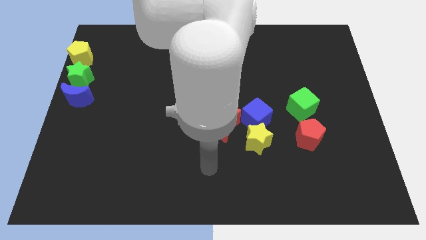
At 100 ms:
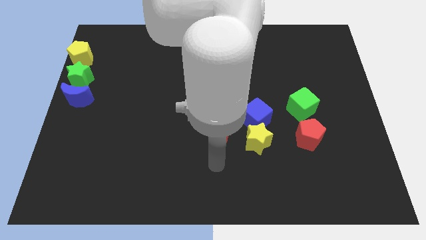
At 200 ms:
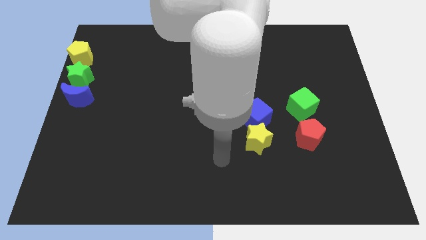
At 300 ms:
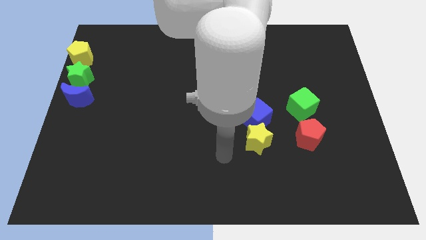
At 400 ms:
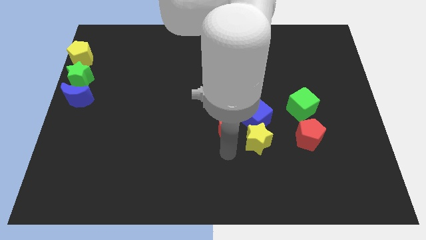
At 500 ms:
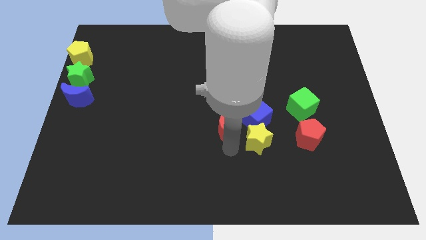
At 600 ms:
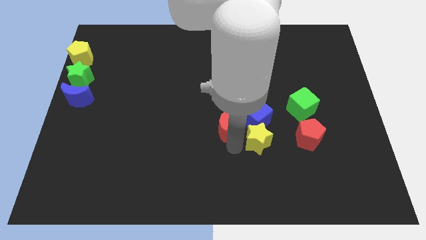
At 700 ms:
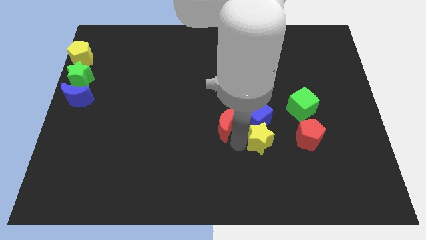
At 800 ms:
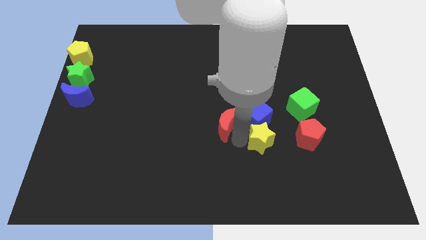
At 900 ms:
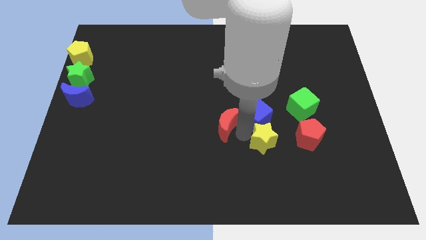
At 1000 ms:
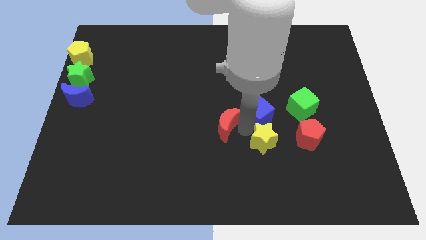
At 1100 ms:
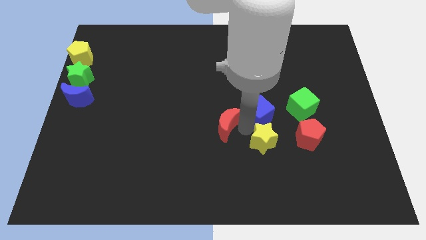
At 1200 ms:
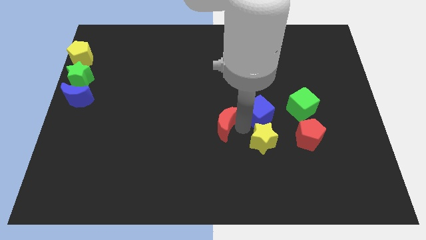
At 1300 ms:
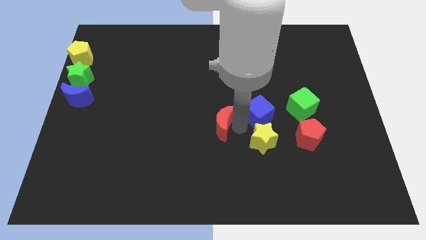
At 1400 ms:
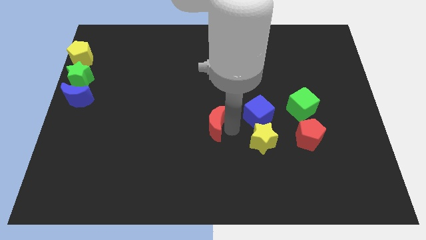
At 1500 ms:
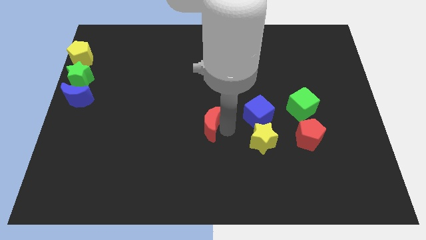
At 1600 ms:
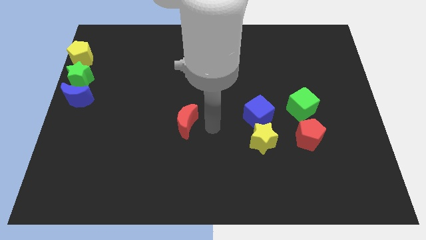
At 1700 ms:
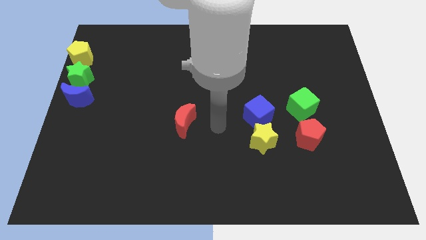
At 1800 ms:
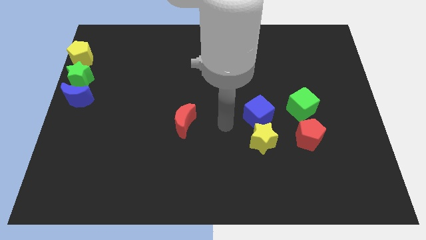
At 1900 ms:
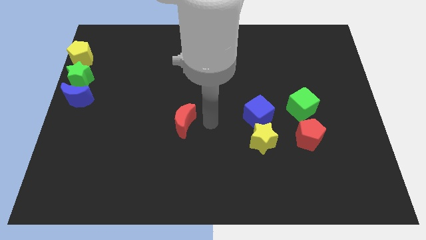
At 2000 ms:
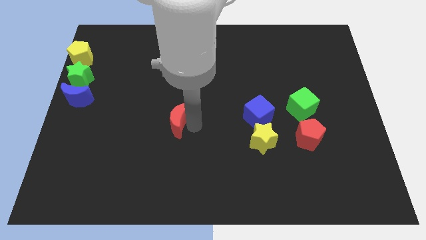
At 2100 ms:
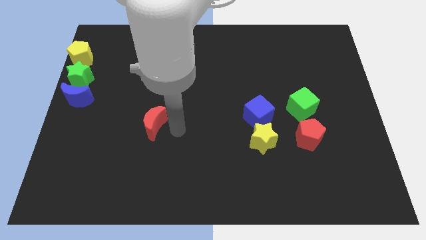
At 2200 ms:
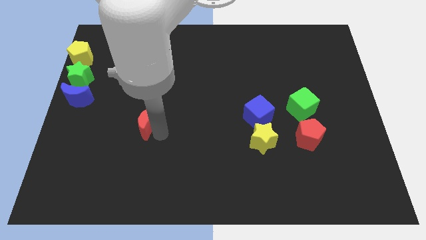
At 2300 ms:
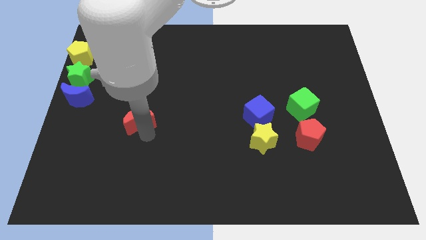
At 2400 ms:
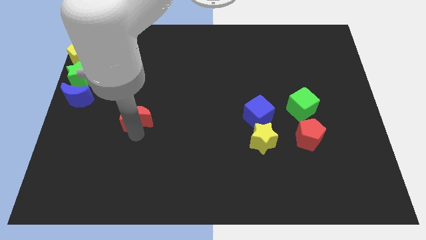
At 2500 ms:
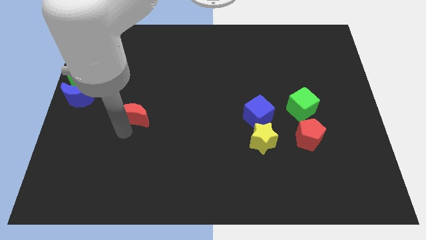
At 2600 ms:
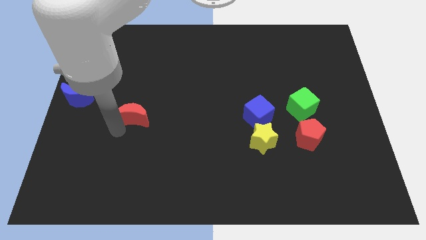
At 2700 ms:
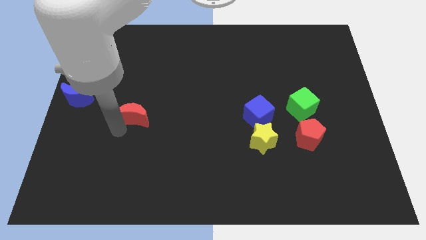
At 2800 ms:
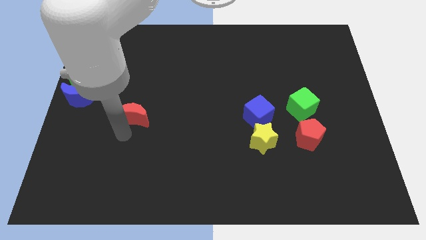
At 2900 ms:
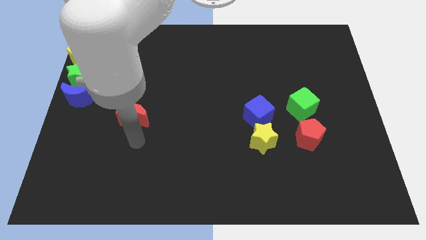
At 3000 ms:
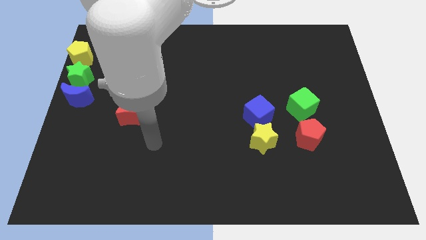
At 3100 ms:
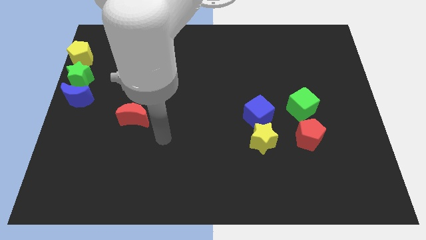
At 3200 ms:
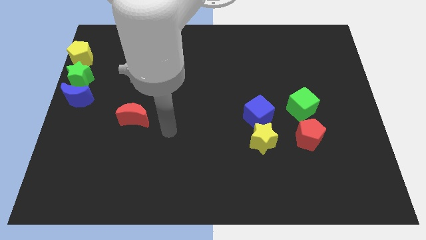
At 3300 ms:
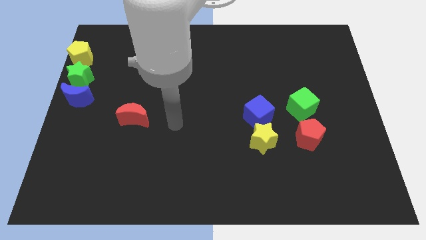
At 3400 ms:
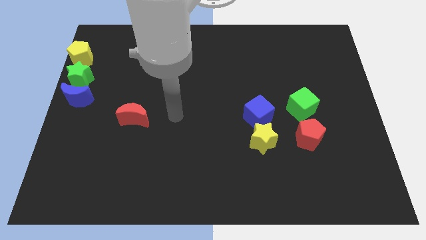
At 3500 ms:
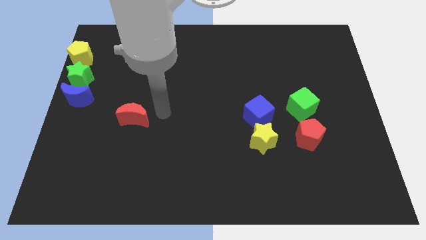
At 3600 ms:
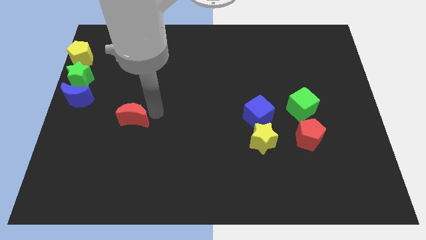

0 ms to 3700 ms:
move the red crescent away from the blue cube

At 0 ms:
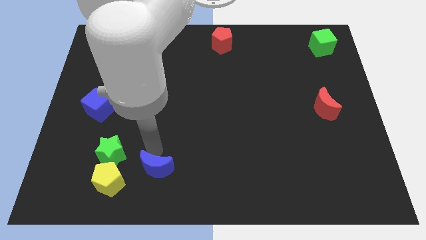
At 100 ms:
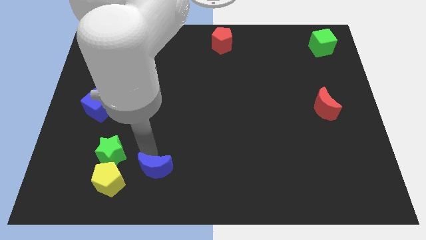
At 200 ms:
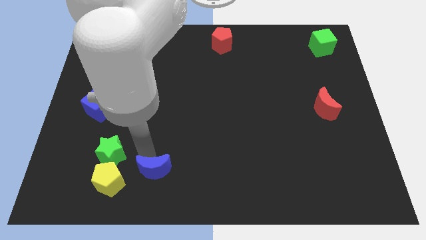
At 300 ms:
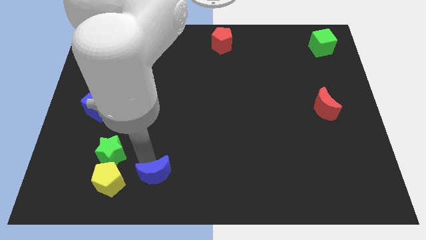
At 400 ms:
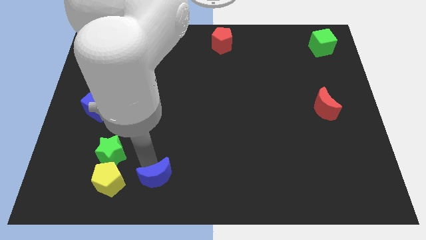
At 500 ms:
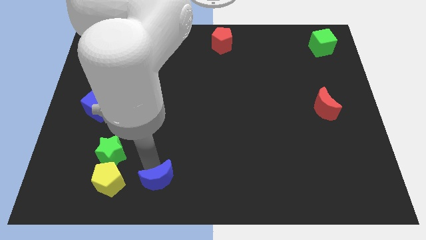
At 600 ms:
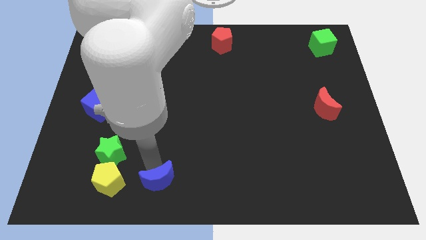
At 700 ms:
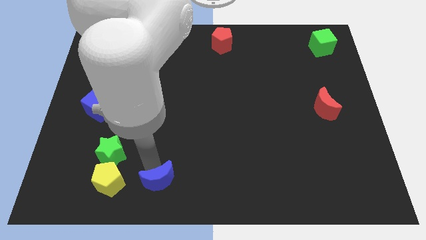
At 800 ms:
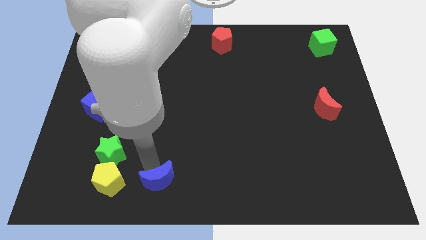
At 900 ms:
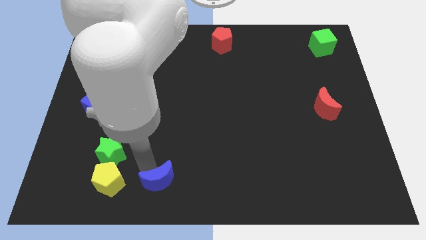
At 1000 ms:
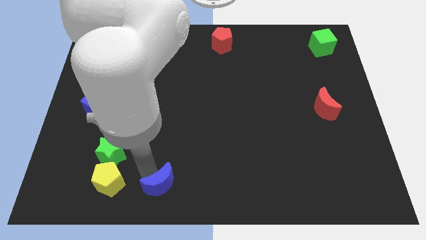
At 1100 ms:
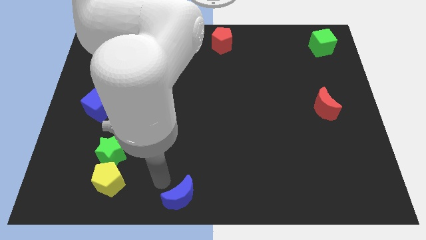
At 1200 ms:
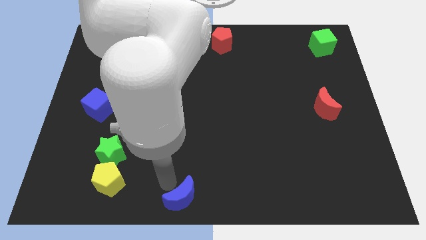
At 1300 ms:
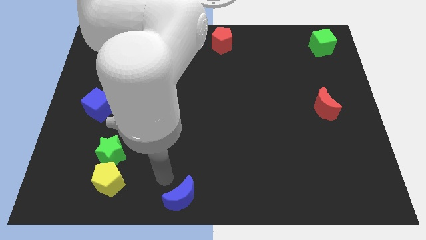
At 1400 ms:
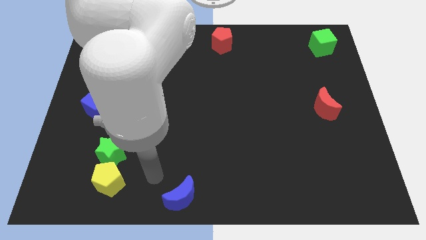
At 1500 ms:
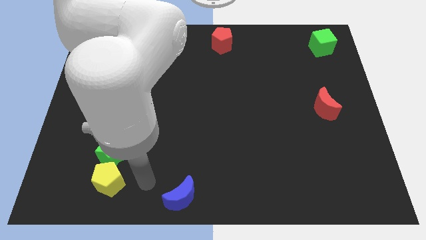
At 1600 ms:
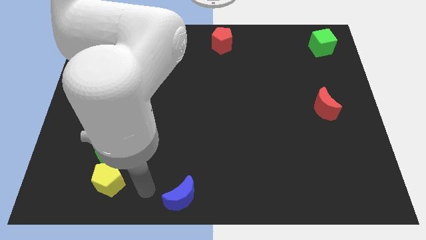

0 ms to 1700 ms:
place the blue moon at the bottom center of the board

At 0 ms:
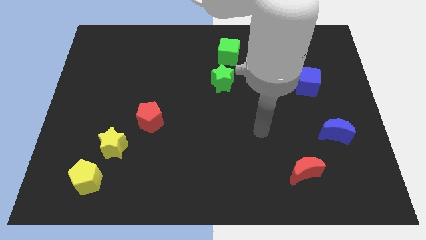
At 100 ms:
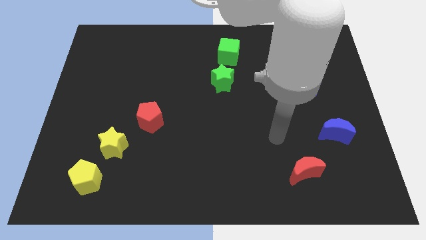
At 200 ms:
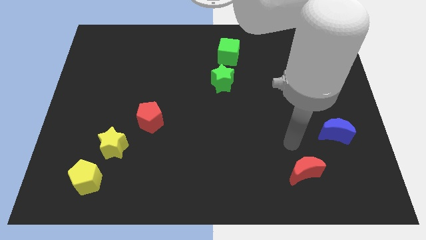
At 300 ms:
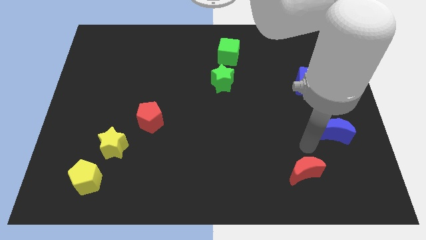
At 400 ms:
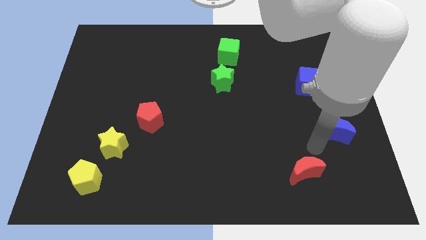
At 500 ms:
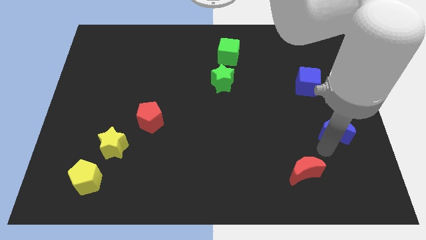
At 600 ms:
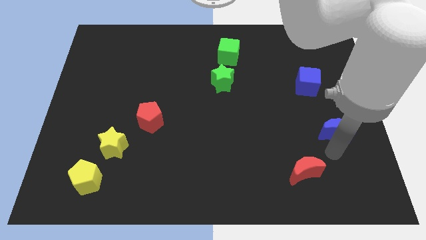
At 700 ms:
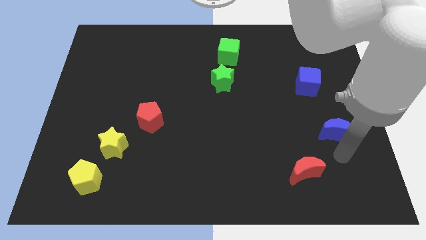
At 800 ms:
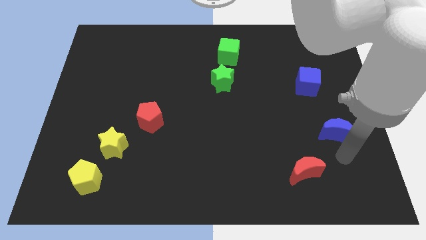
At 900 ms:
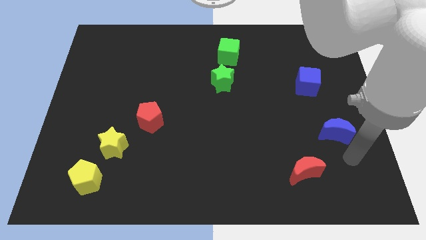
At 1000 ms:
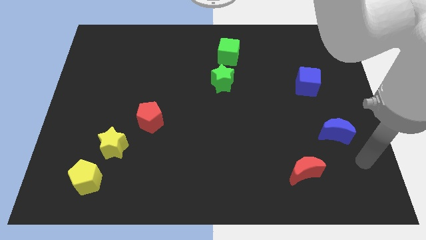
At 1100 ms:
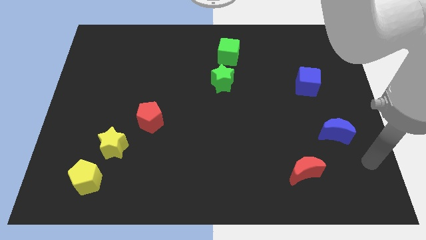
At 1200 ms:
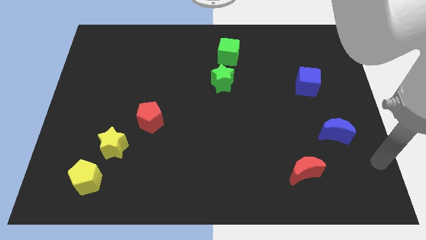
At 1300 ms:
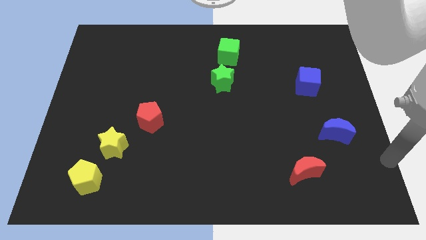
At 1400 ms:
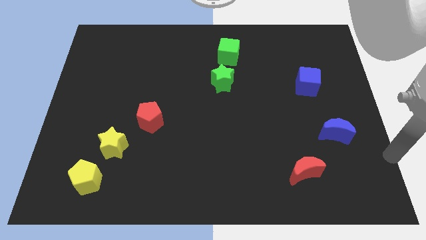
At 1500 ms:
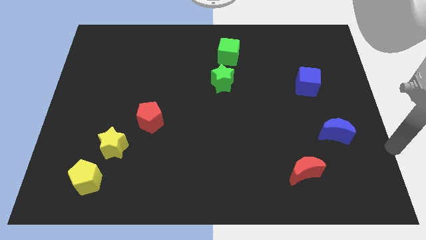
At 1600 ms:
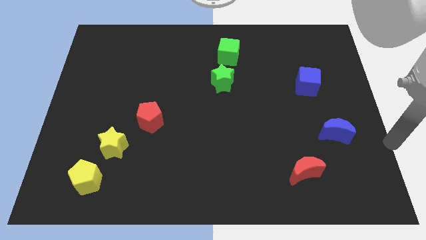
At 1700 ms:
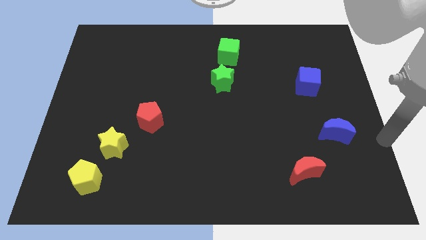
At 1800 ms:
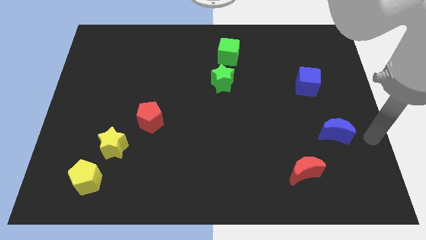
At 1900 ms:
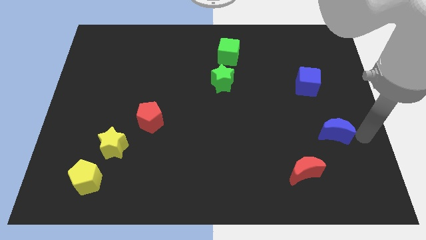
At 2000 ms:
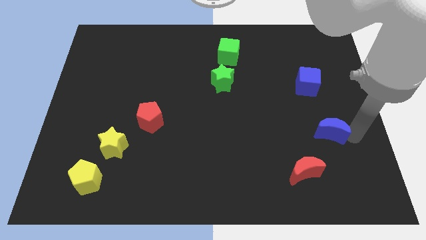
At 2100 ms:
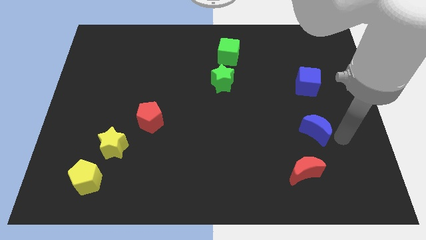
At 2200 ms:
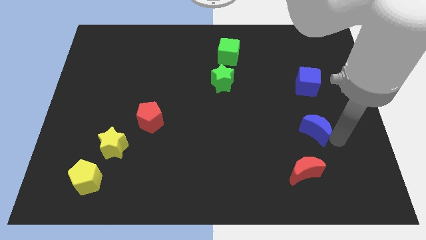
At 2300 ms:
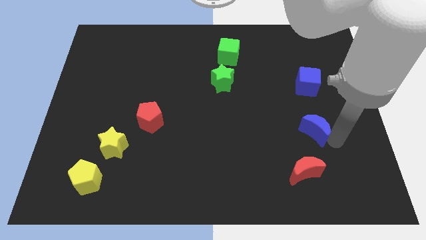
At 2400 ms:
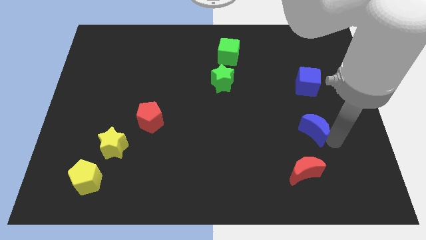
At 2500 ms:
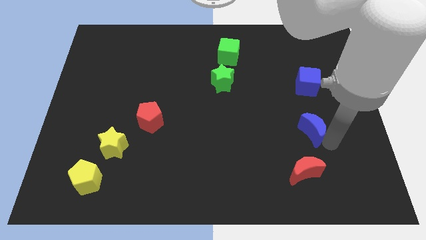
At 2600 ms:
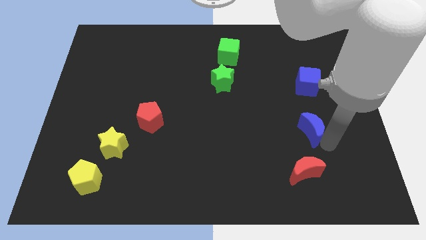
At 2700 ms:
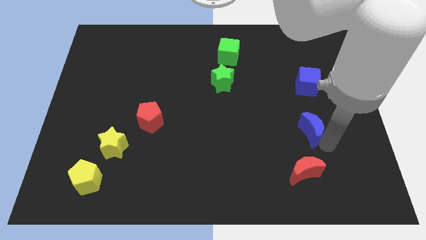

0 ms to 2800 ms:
place blue crescent in between blue cube and red crescent

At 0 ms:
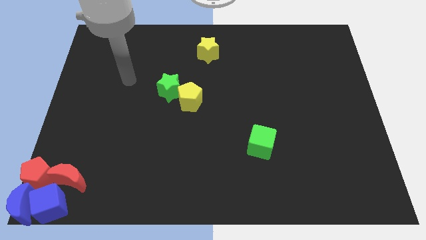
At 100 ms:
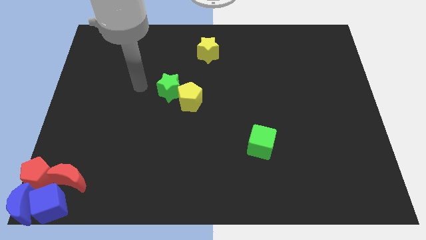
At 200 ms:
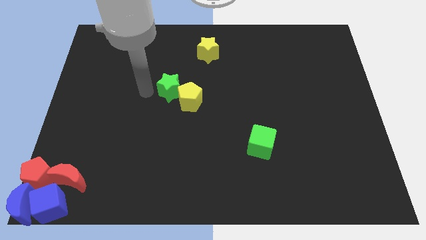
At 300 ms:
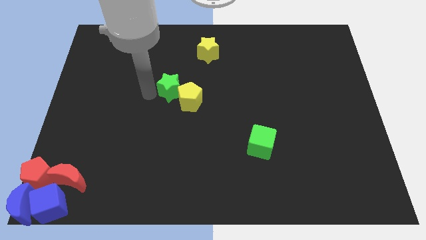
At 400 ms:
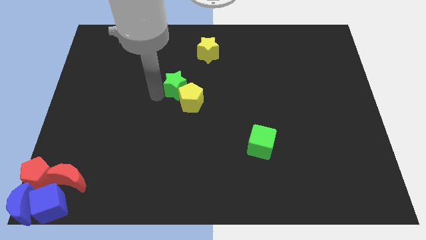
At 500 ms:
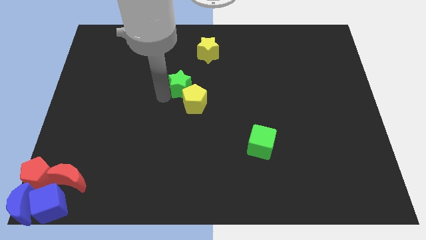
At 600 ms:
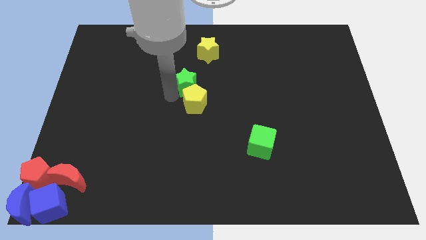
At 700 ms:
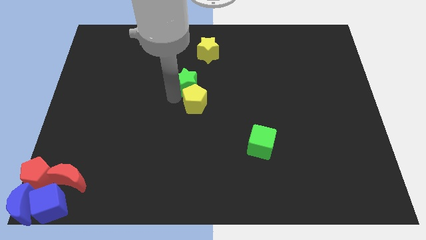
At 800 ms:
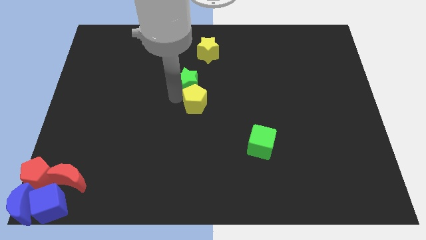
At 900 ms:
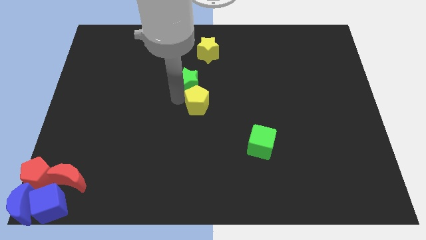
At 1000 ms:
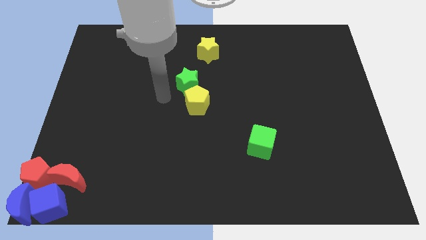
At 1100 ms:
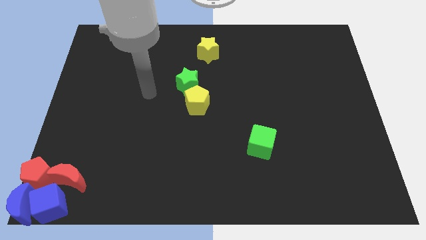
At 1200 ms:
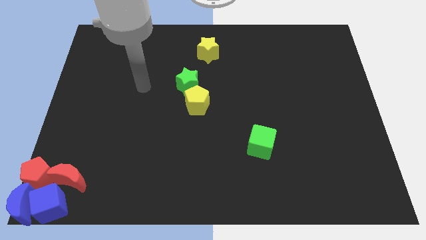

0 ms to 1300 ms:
push the green star into the yellow pentagon
